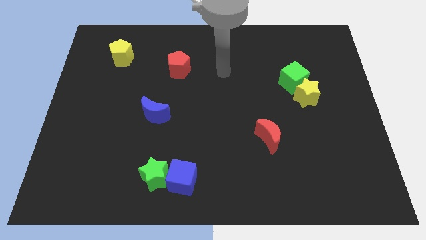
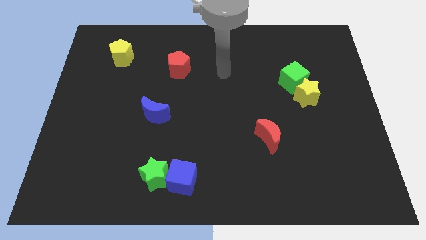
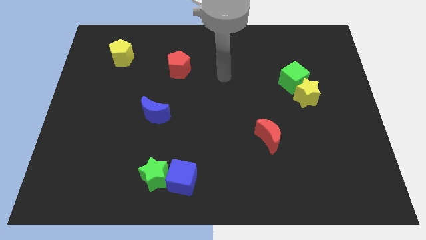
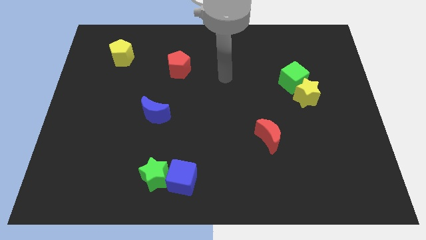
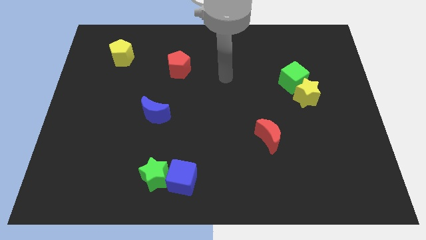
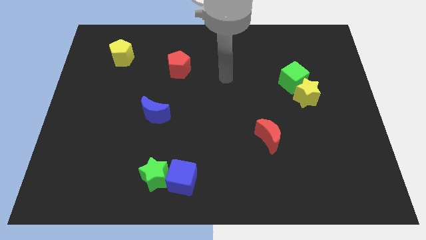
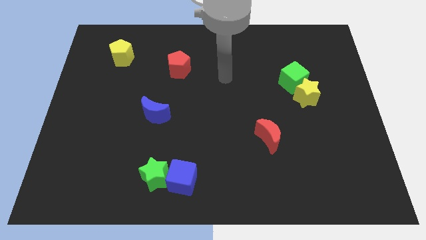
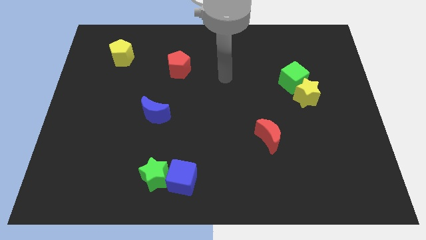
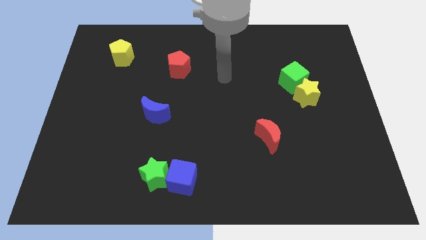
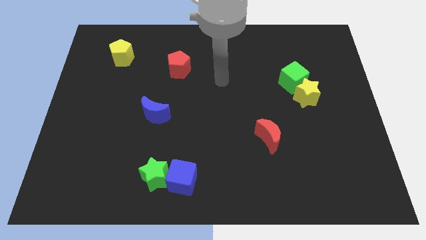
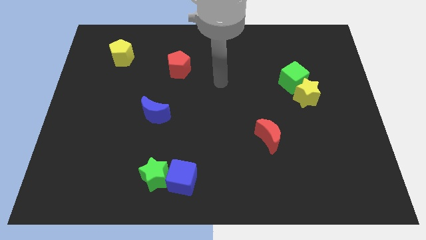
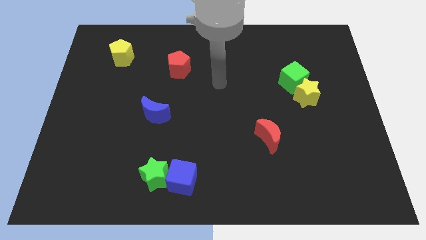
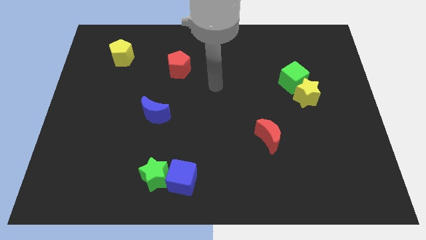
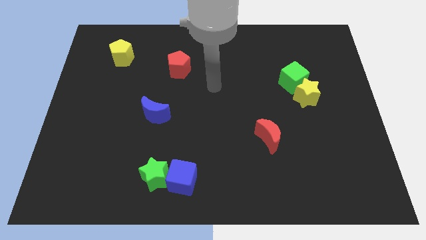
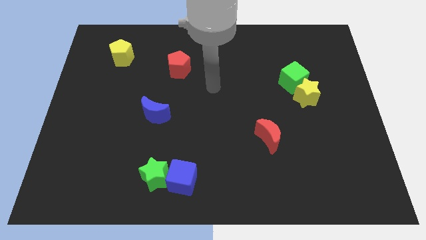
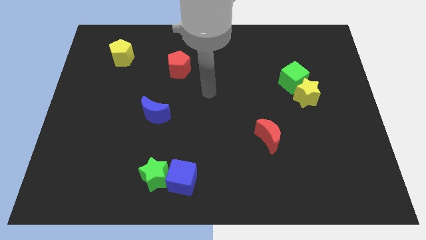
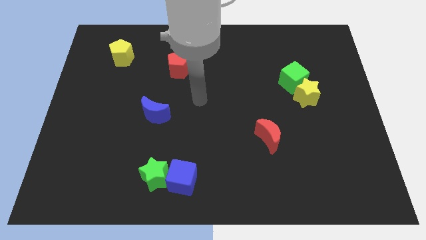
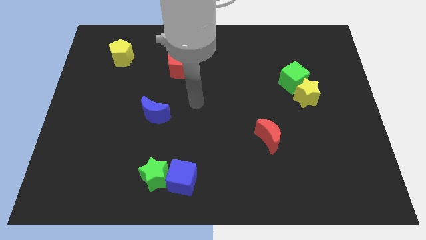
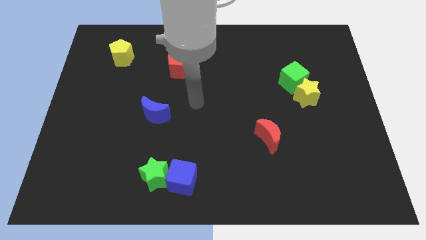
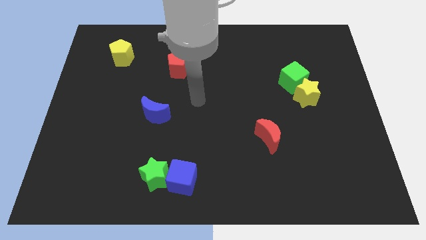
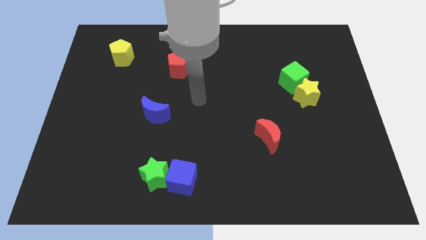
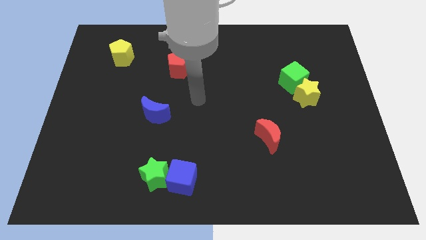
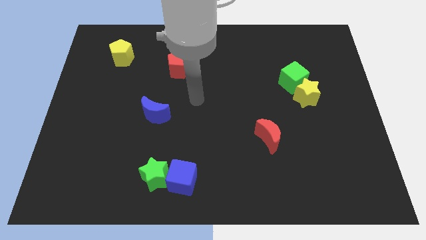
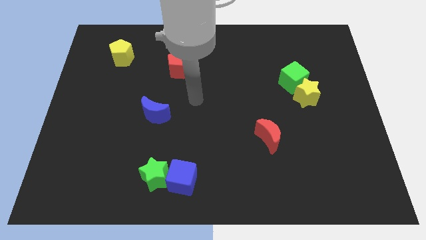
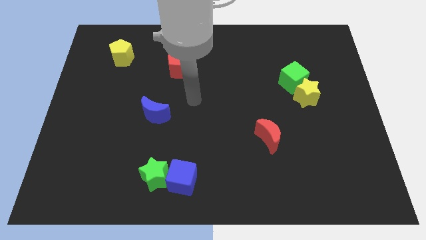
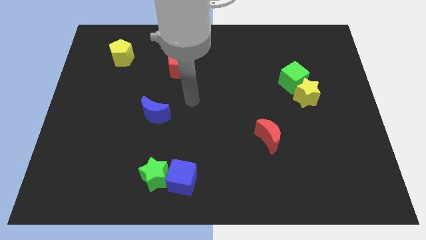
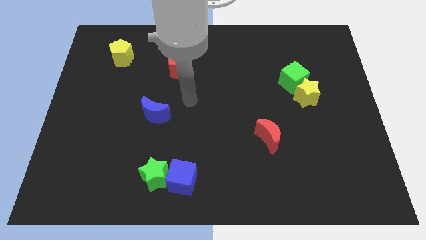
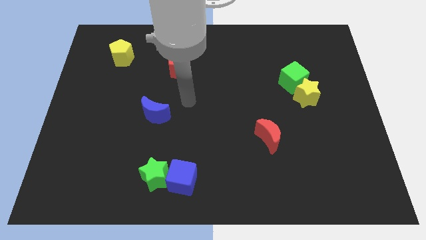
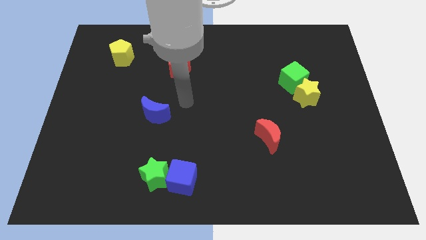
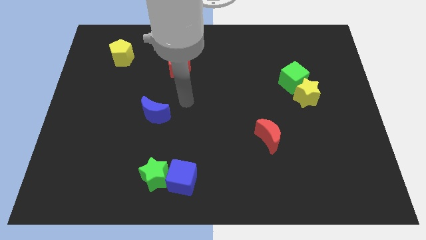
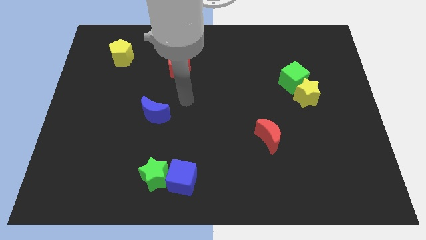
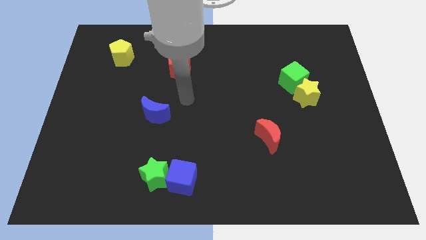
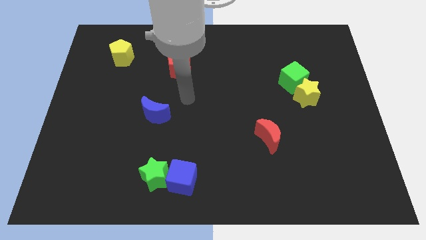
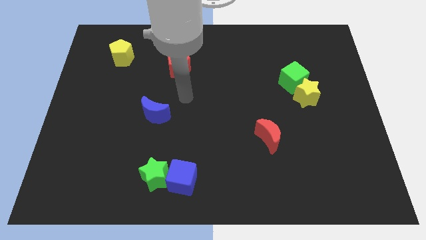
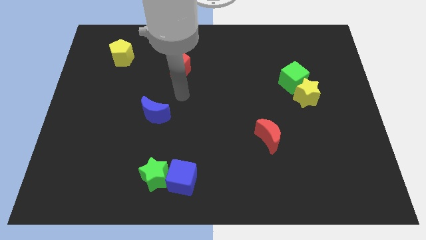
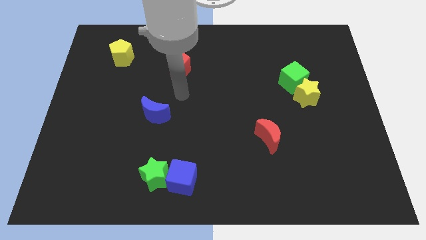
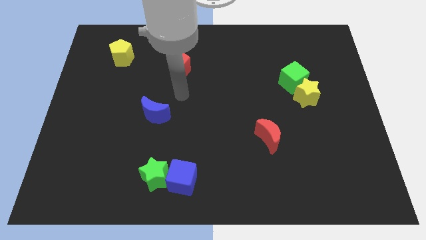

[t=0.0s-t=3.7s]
move your arm towards blue moon

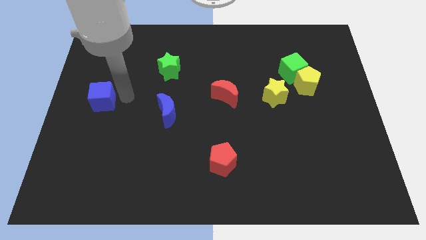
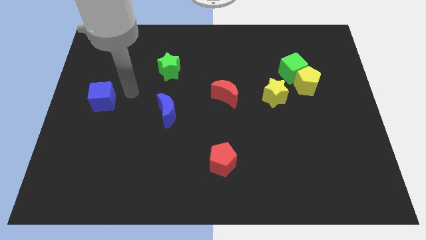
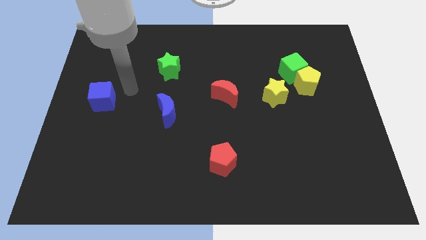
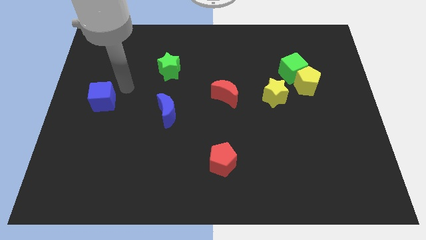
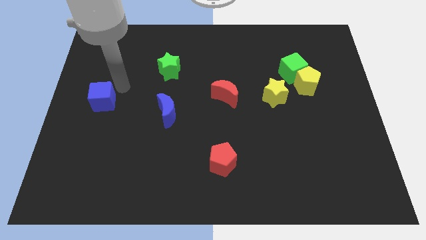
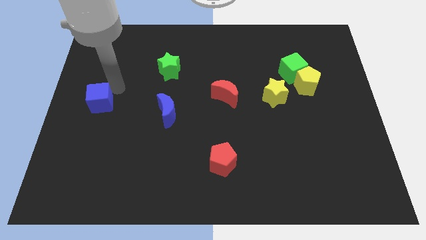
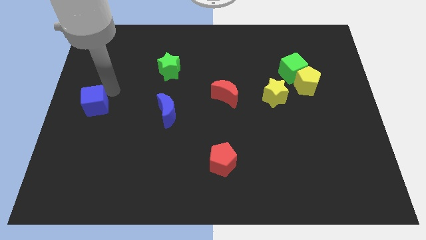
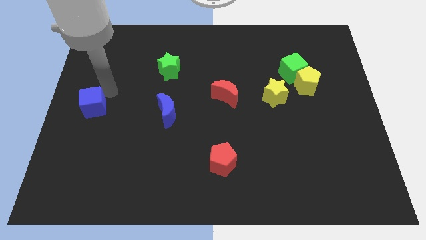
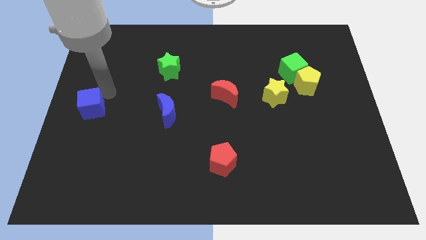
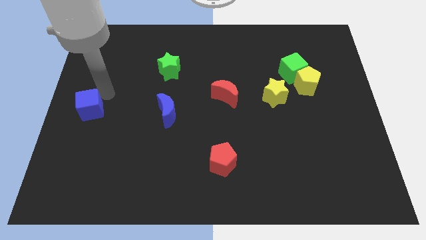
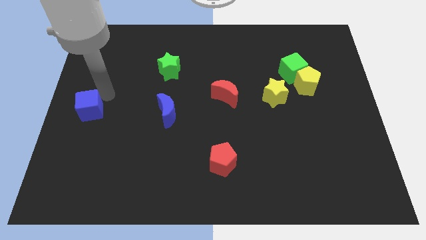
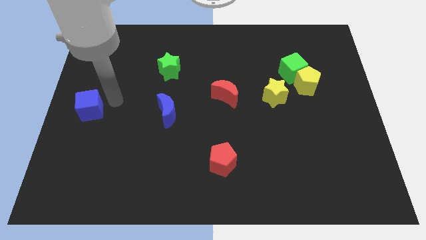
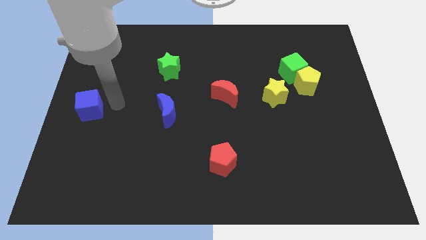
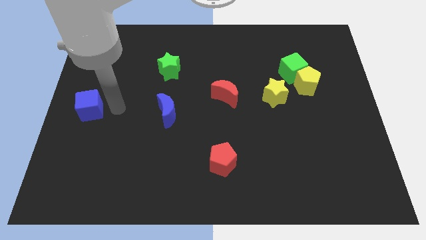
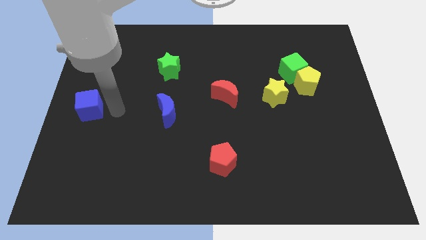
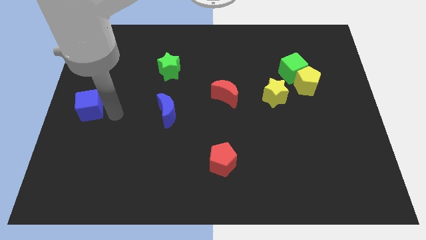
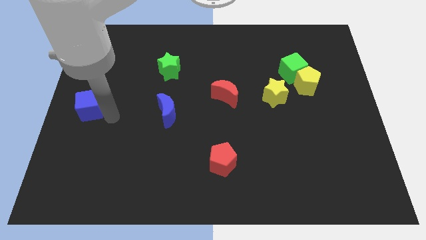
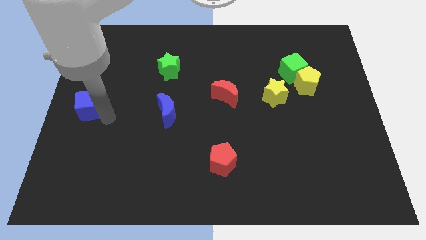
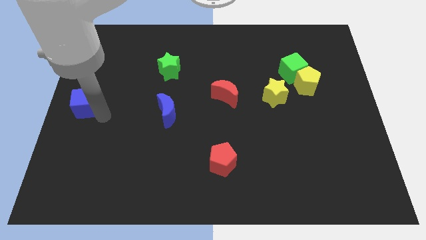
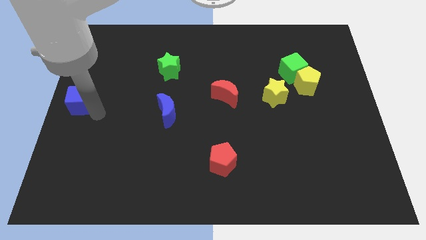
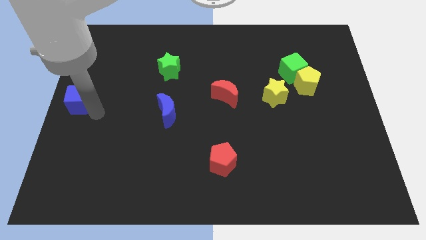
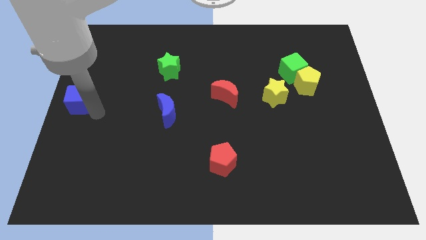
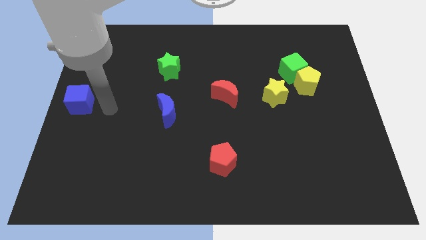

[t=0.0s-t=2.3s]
place the cube at the left center of the board

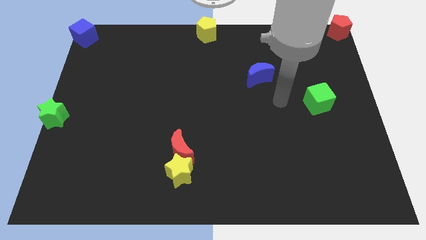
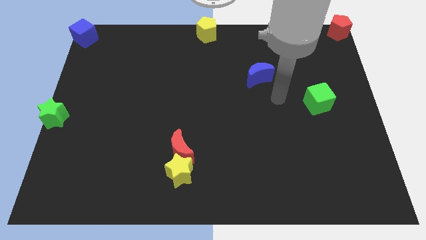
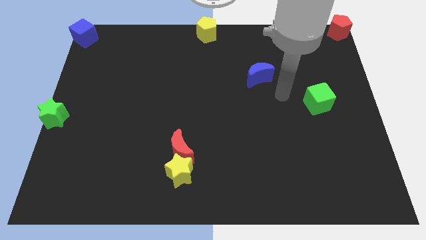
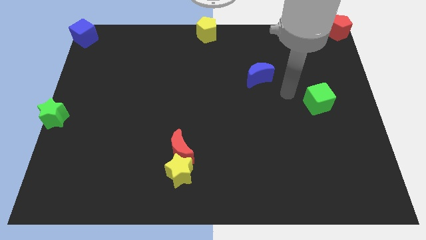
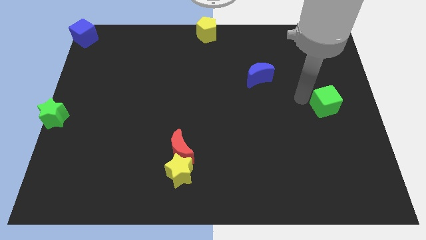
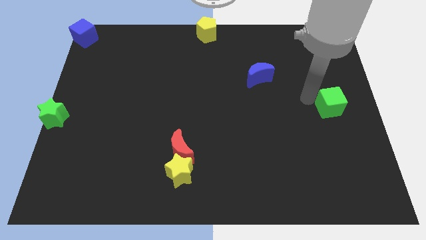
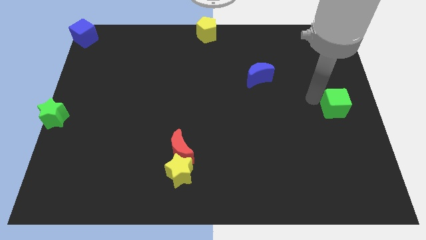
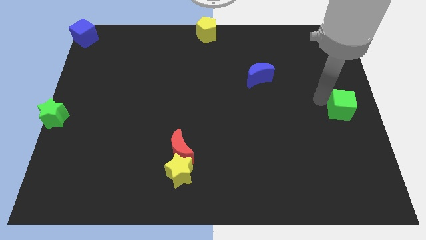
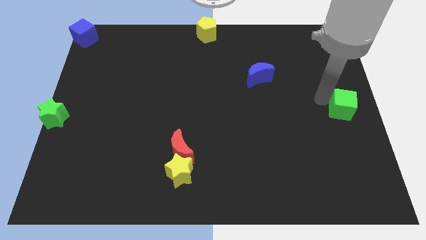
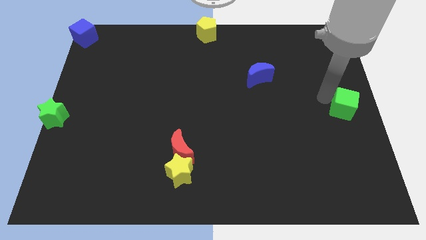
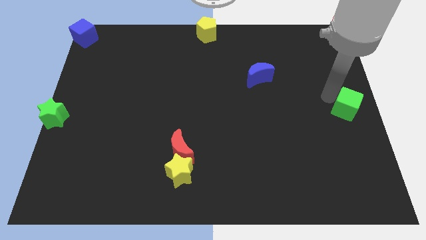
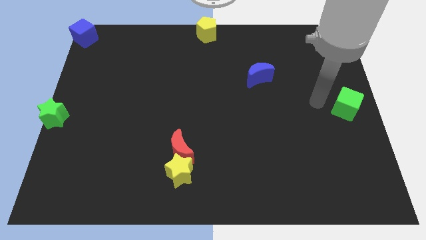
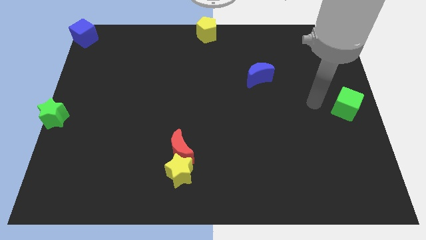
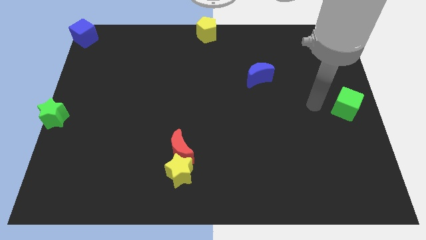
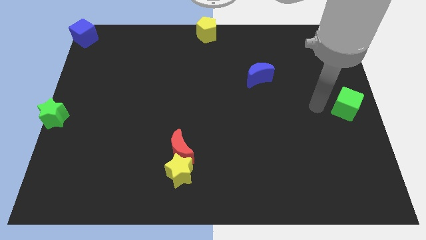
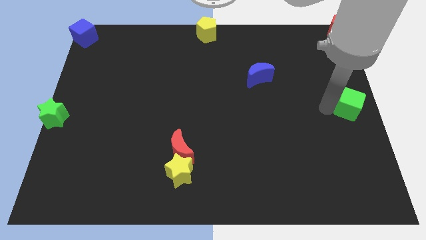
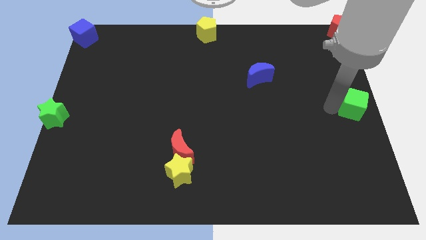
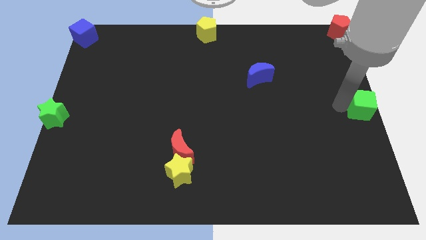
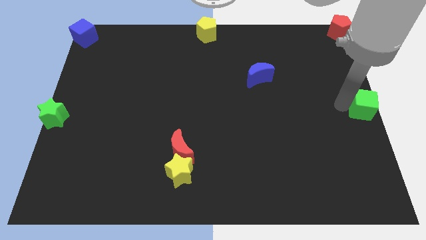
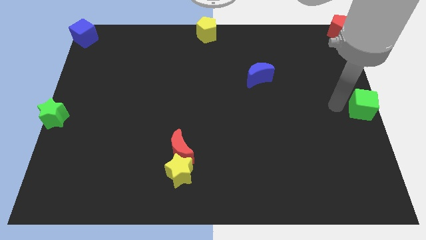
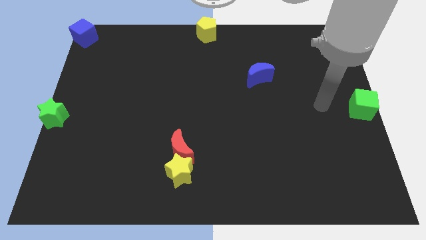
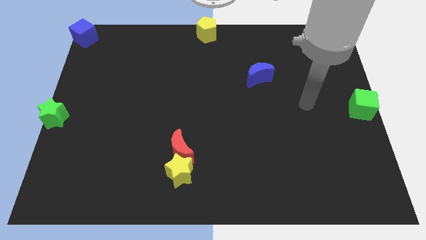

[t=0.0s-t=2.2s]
push the green cube to the center right

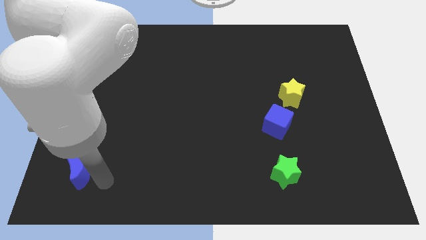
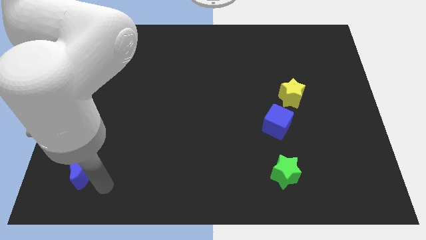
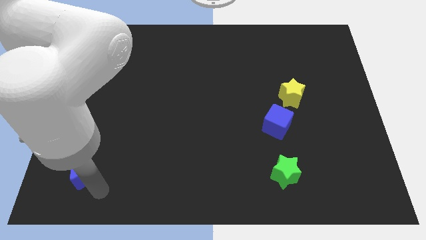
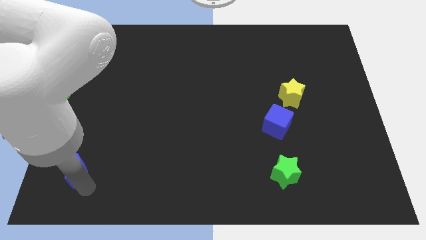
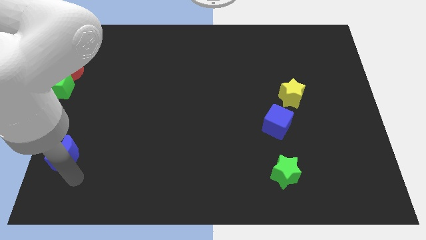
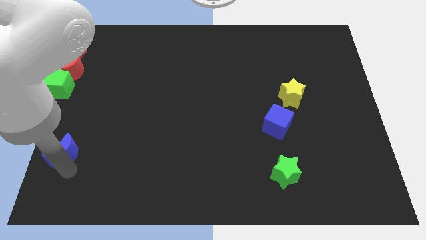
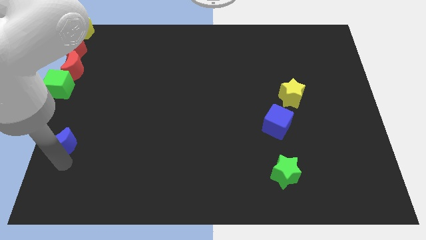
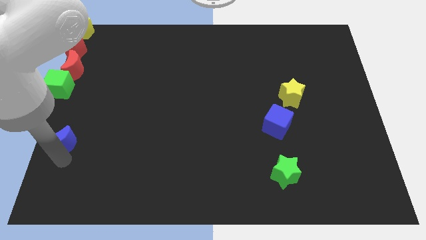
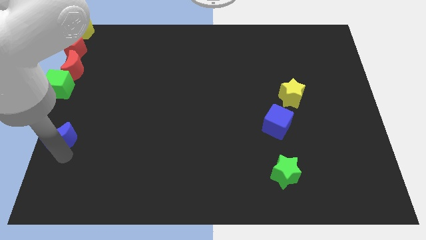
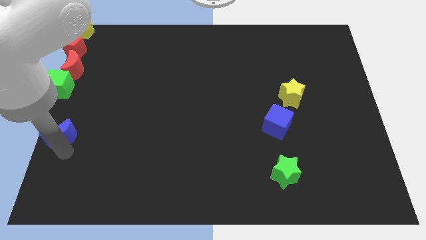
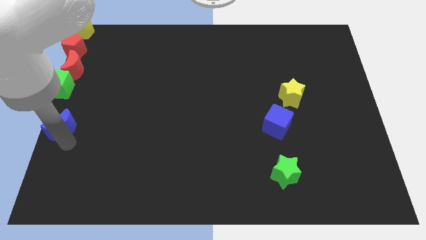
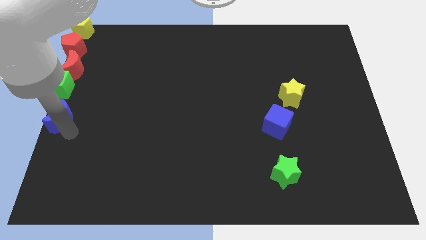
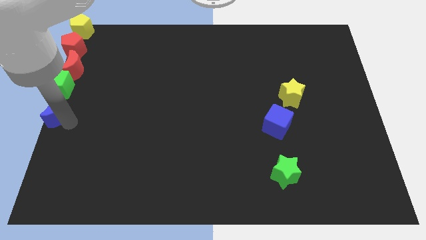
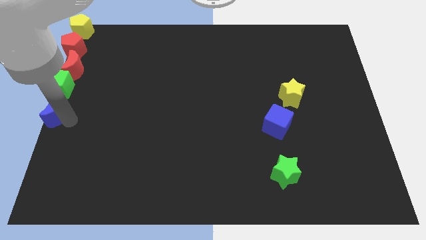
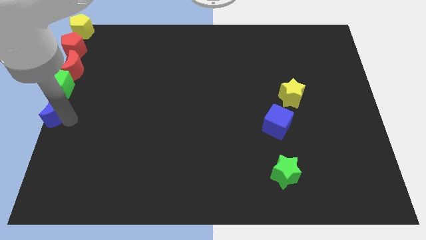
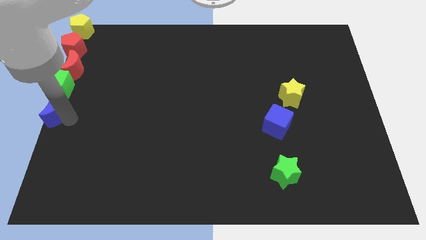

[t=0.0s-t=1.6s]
push the blue crescent to the bottom of the green cube
